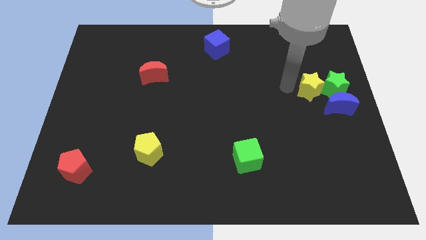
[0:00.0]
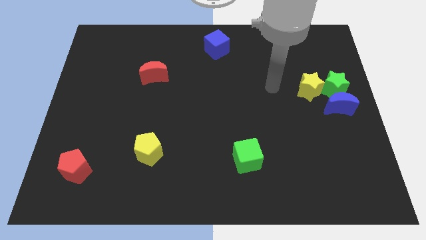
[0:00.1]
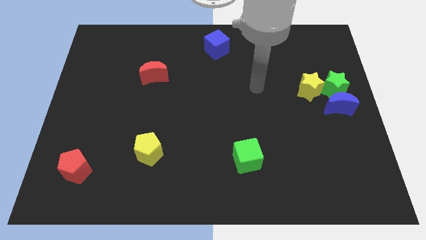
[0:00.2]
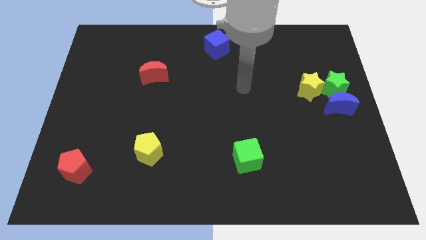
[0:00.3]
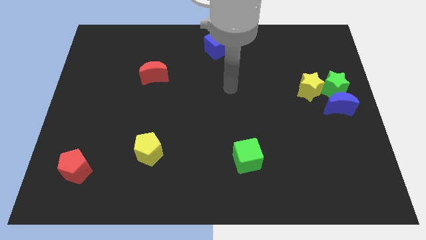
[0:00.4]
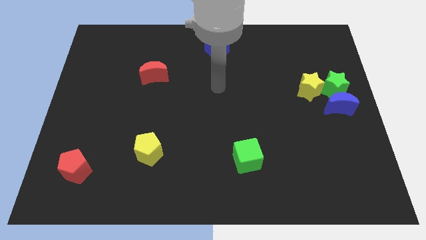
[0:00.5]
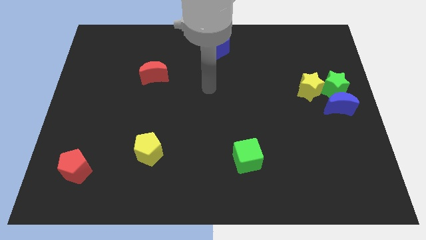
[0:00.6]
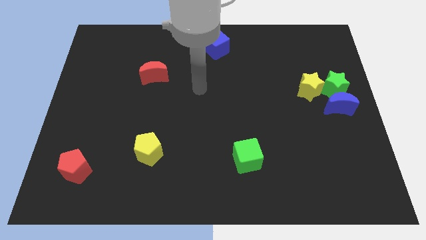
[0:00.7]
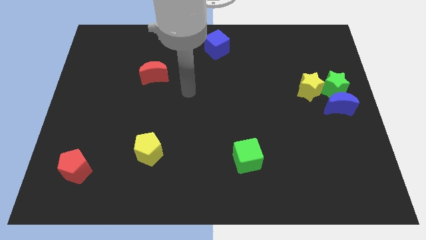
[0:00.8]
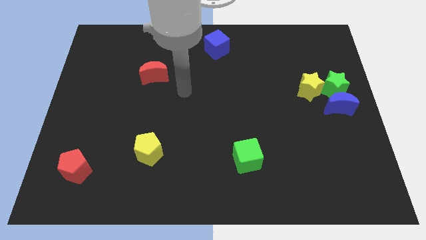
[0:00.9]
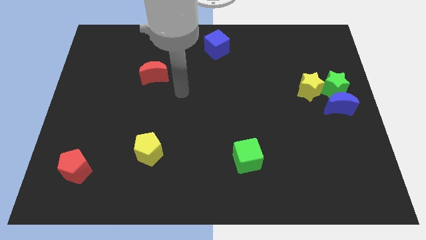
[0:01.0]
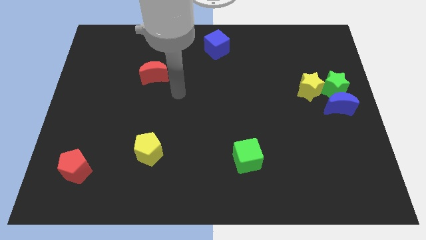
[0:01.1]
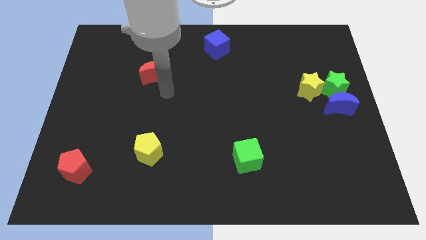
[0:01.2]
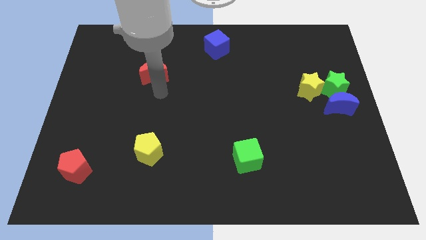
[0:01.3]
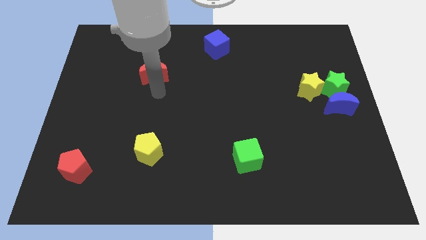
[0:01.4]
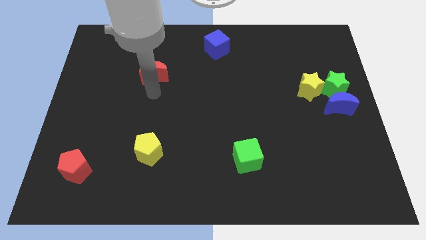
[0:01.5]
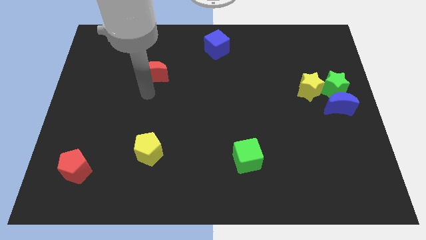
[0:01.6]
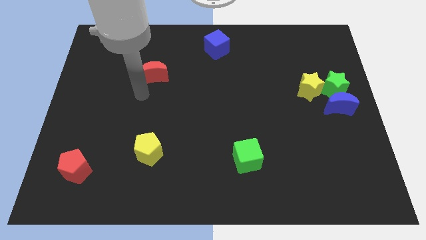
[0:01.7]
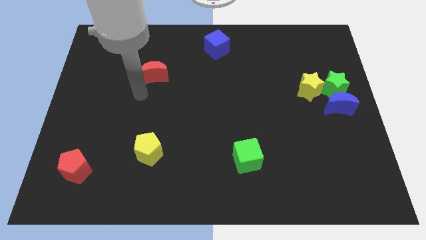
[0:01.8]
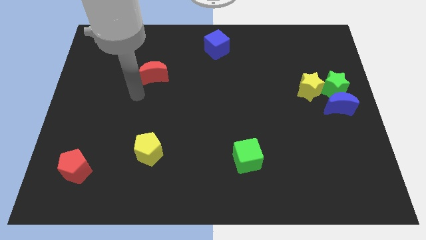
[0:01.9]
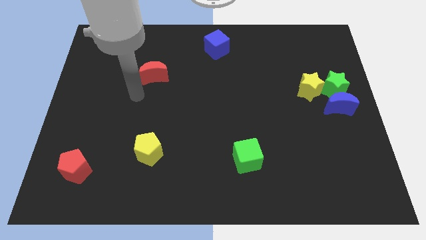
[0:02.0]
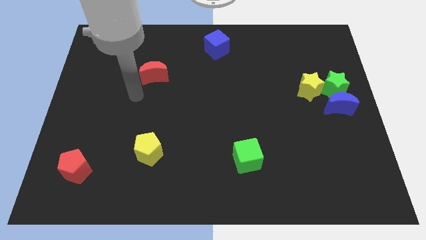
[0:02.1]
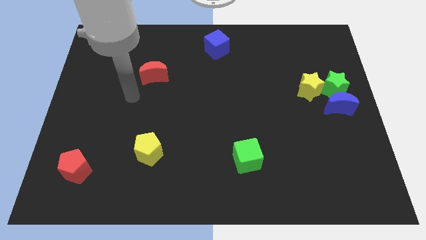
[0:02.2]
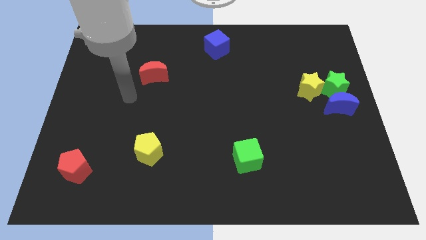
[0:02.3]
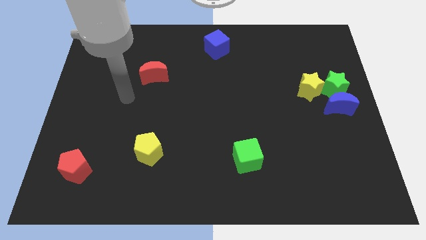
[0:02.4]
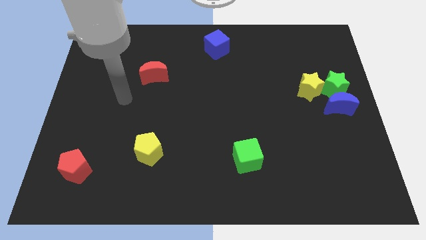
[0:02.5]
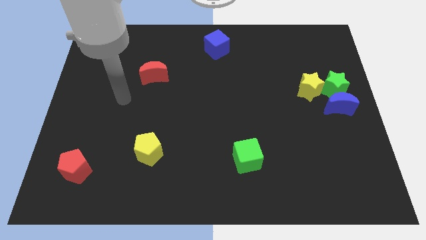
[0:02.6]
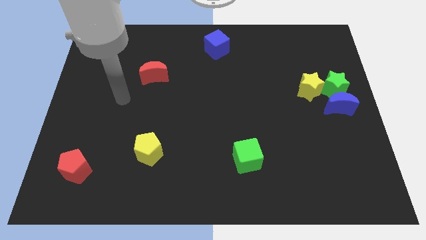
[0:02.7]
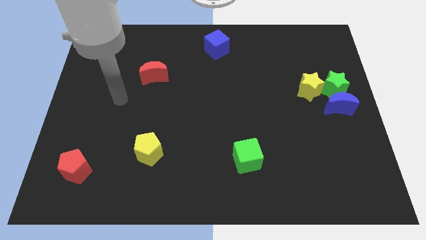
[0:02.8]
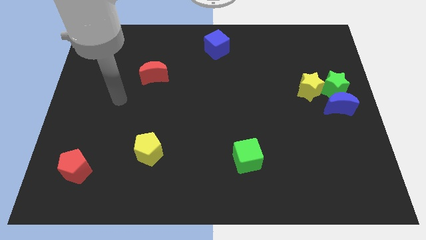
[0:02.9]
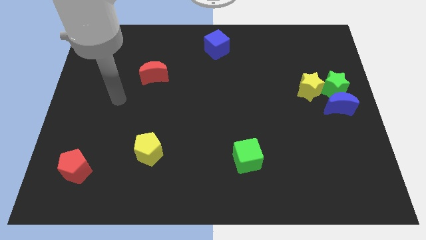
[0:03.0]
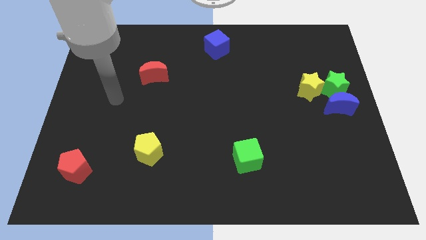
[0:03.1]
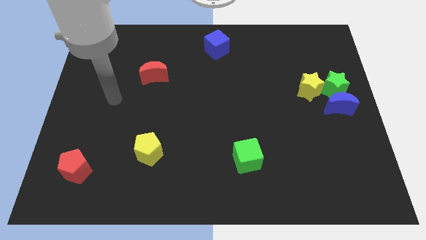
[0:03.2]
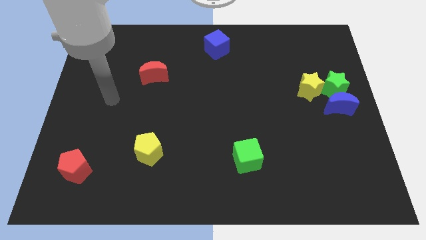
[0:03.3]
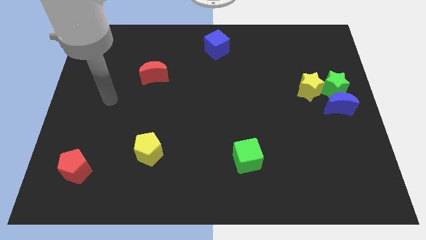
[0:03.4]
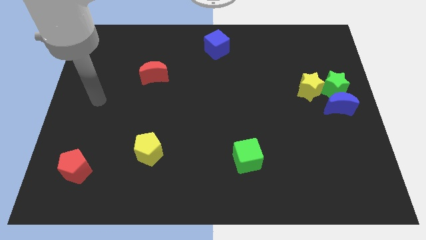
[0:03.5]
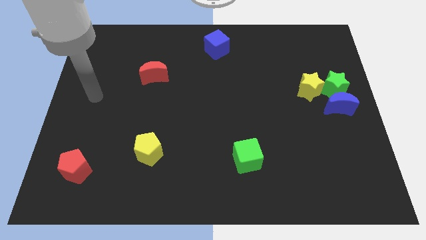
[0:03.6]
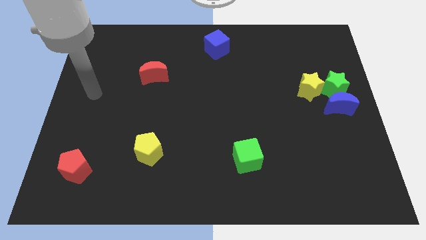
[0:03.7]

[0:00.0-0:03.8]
go to the left side of the table

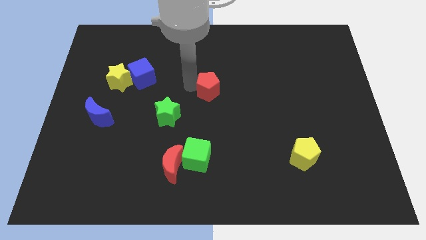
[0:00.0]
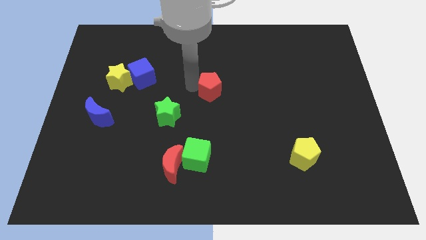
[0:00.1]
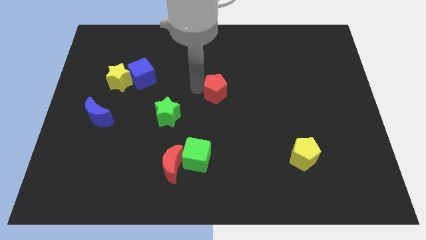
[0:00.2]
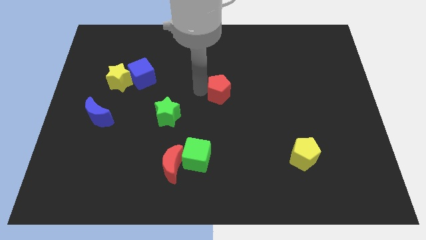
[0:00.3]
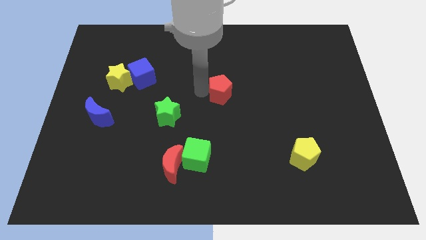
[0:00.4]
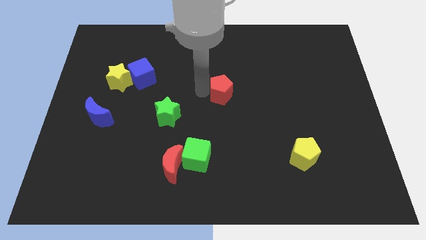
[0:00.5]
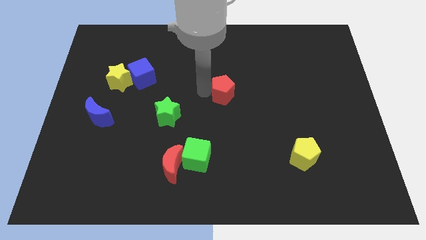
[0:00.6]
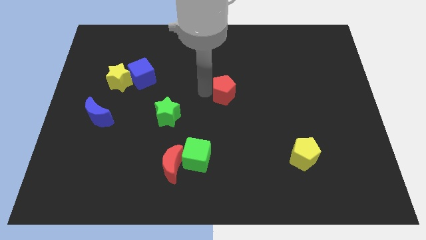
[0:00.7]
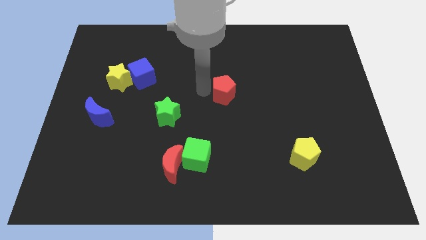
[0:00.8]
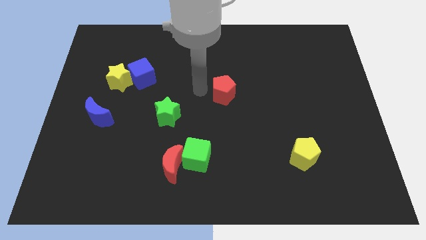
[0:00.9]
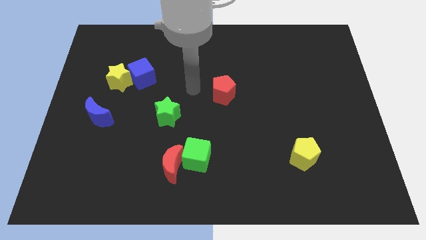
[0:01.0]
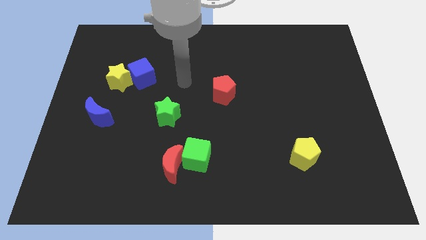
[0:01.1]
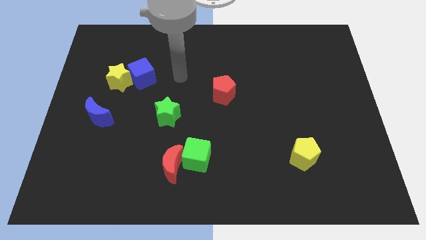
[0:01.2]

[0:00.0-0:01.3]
put the red pentagon at the center of the board

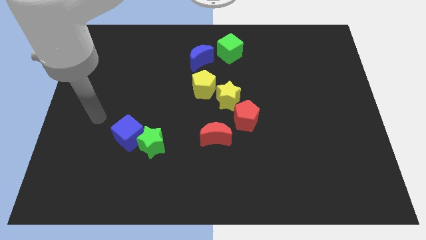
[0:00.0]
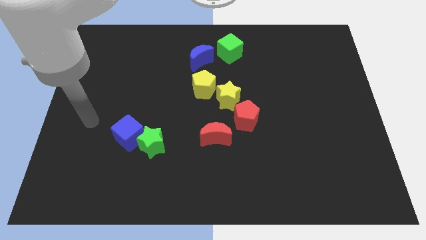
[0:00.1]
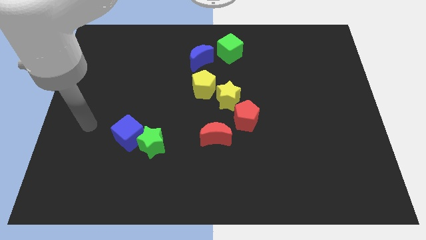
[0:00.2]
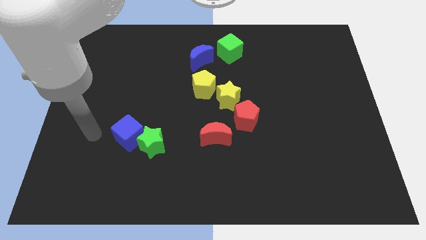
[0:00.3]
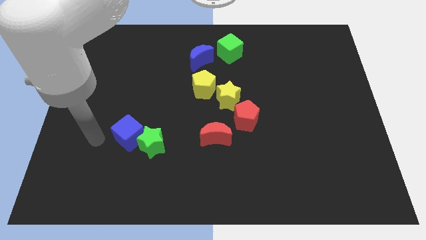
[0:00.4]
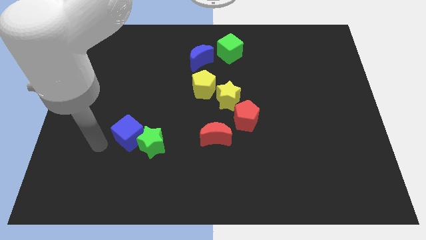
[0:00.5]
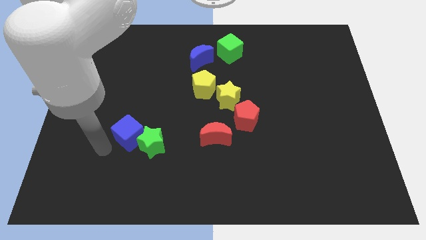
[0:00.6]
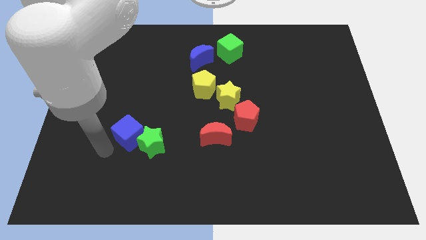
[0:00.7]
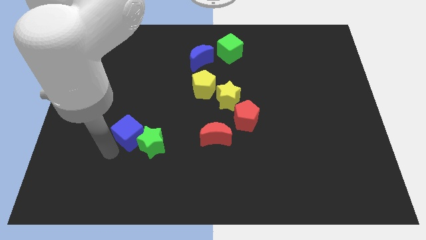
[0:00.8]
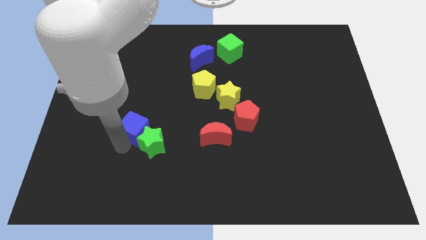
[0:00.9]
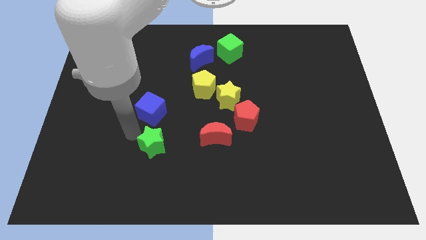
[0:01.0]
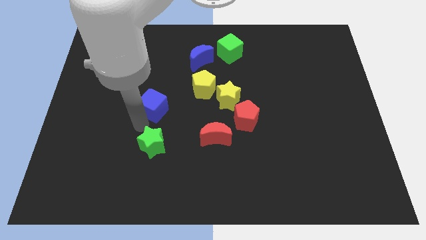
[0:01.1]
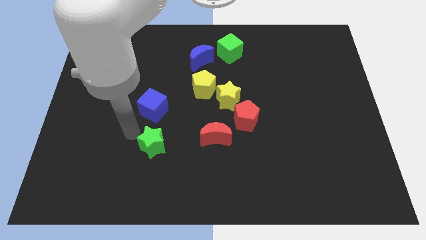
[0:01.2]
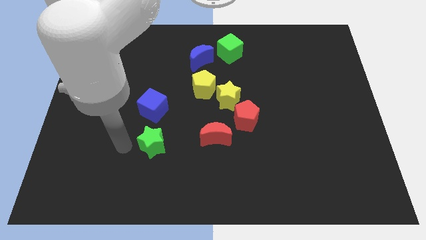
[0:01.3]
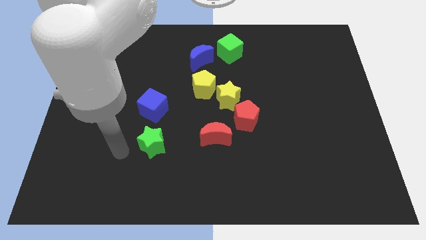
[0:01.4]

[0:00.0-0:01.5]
place the blue cube above the green star

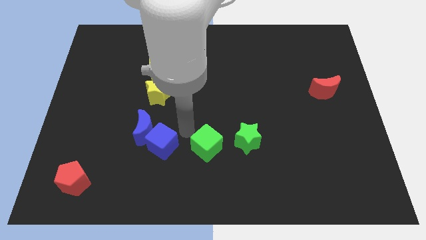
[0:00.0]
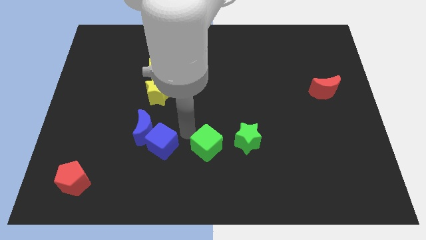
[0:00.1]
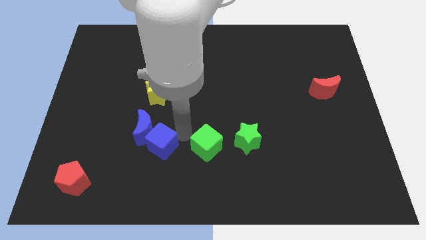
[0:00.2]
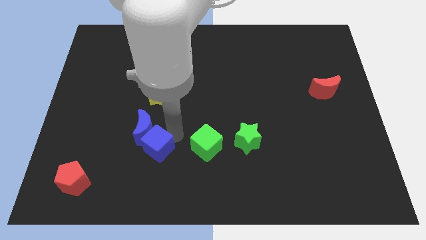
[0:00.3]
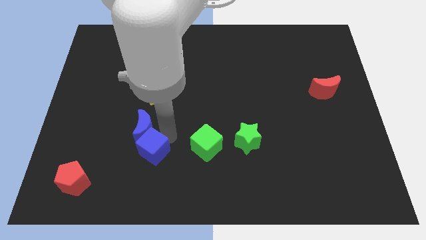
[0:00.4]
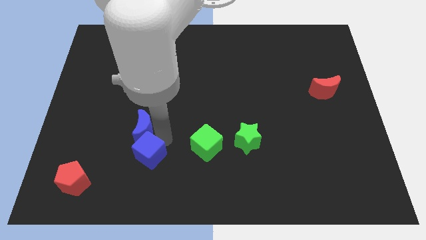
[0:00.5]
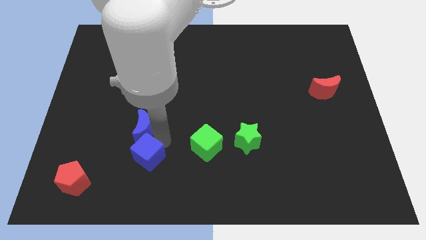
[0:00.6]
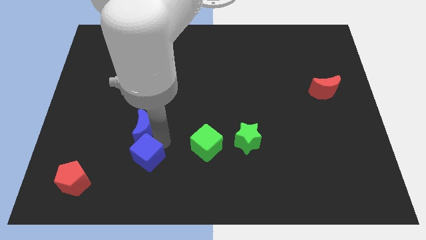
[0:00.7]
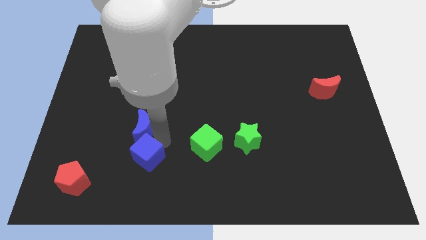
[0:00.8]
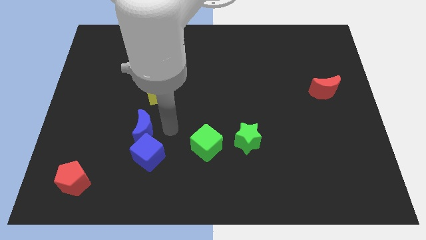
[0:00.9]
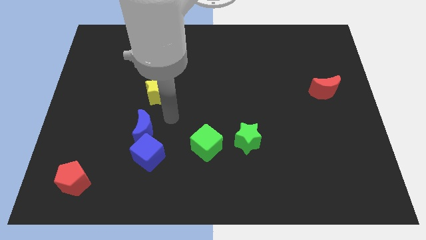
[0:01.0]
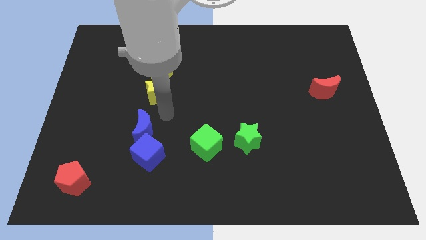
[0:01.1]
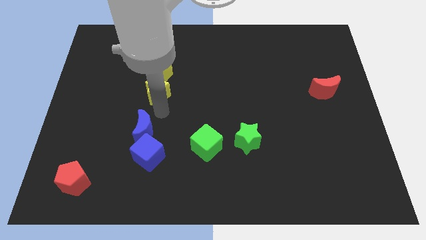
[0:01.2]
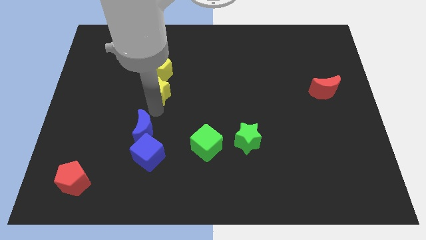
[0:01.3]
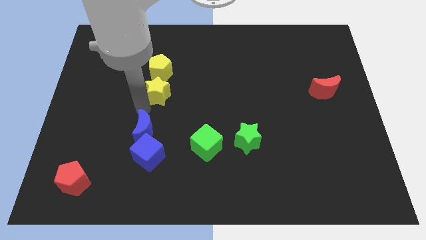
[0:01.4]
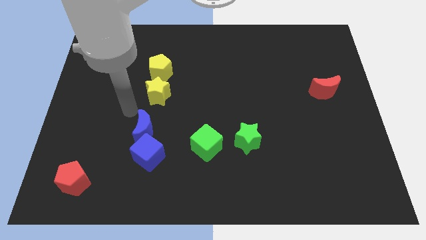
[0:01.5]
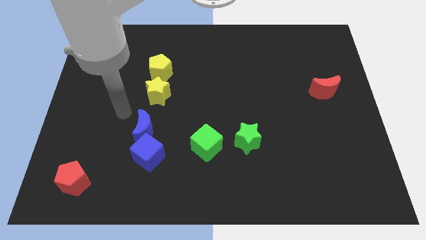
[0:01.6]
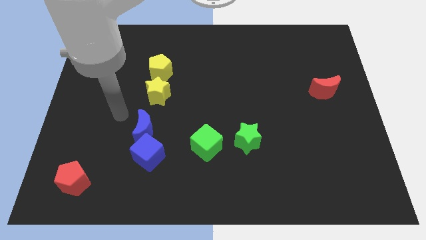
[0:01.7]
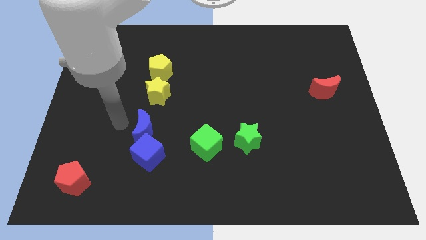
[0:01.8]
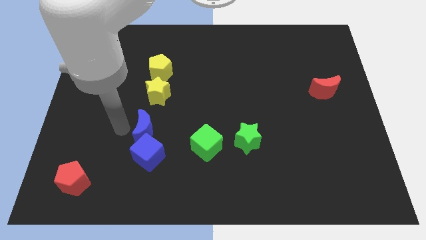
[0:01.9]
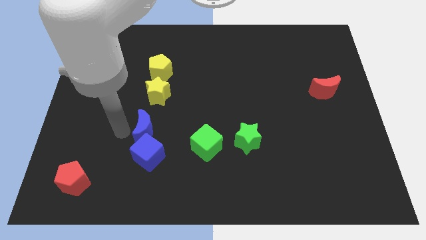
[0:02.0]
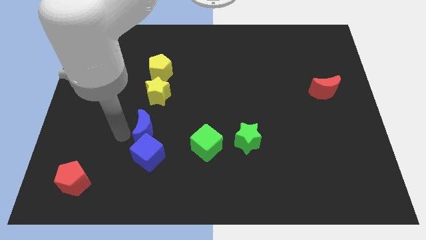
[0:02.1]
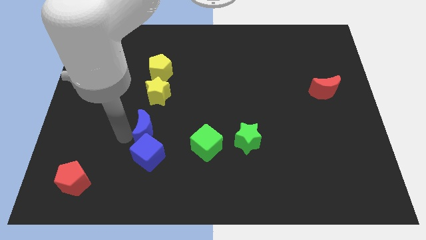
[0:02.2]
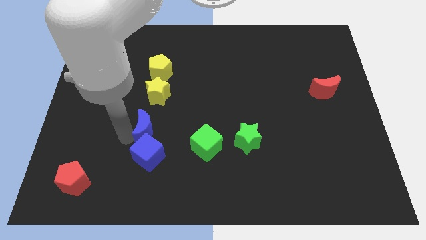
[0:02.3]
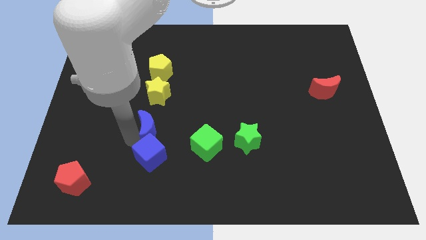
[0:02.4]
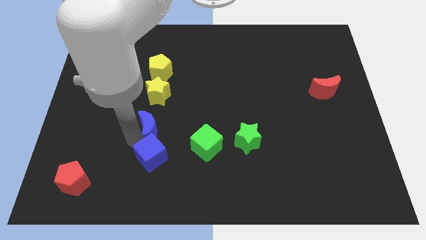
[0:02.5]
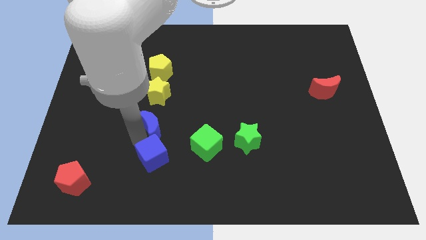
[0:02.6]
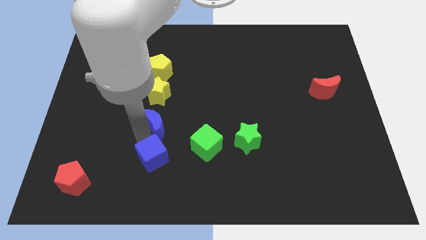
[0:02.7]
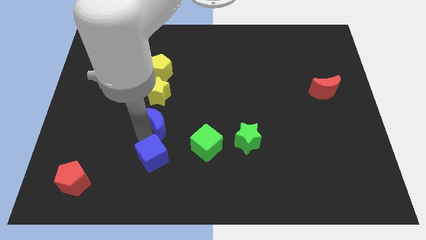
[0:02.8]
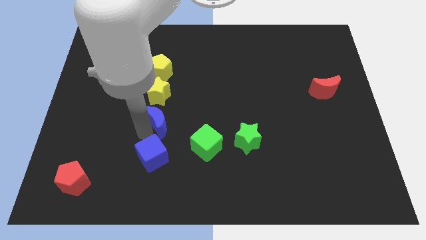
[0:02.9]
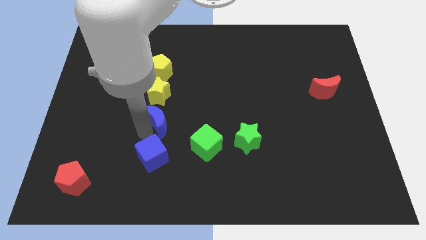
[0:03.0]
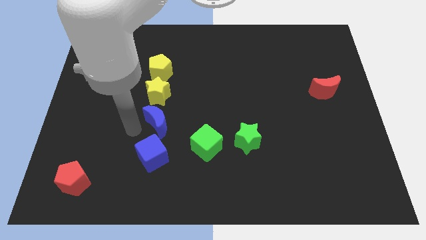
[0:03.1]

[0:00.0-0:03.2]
place the blue cube and blue crescent to the bottom of the yellow star
